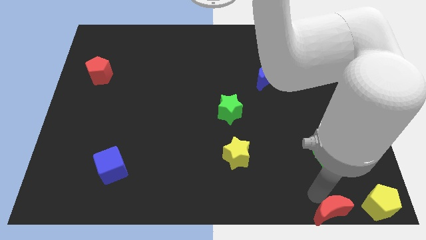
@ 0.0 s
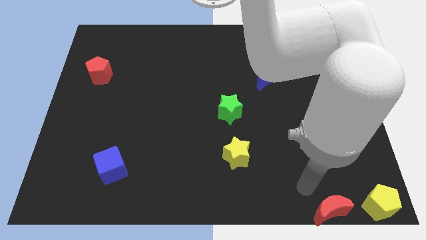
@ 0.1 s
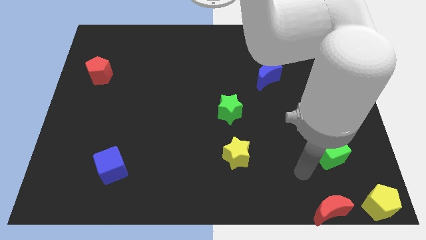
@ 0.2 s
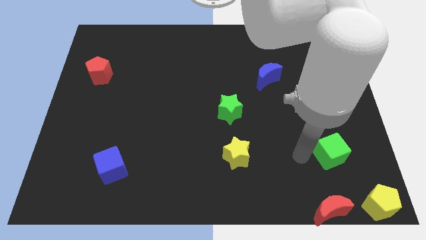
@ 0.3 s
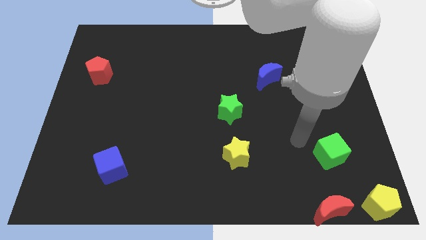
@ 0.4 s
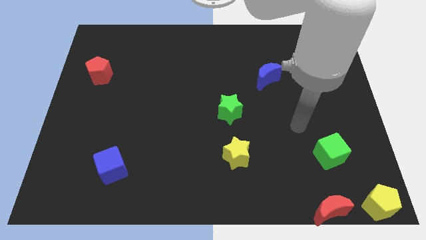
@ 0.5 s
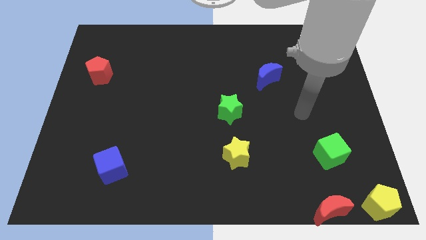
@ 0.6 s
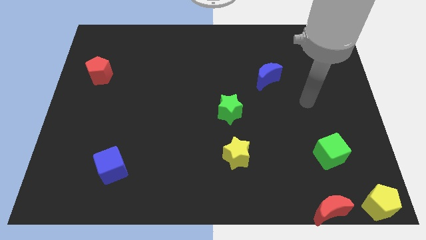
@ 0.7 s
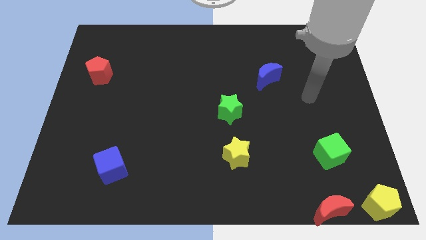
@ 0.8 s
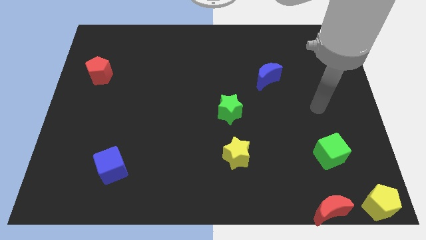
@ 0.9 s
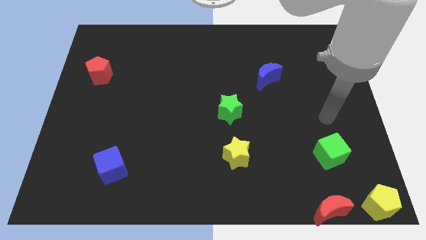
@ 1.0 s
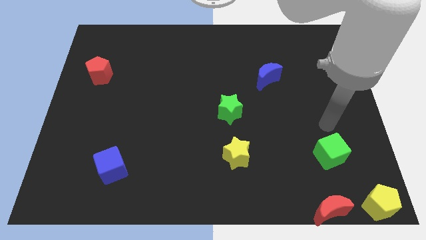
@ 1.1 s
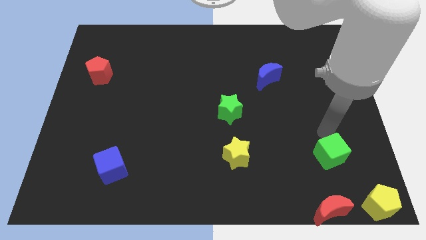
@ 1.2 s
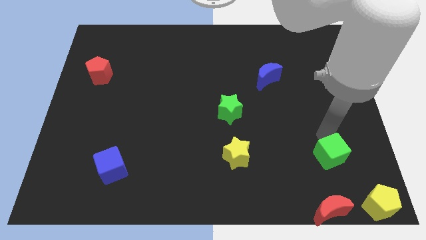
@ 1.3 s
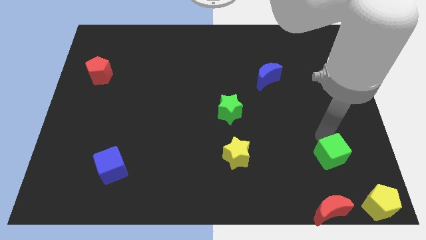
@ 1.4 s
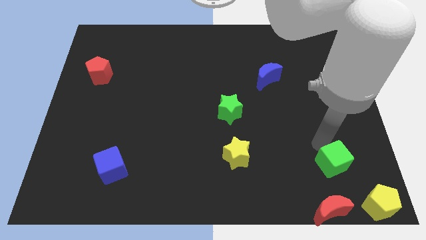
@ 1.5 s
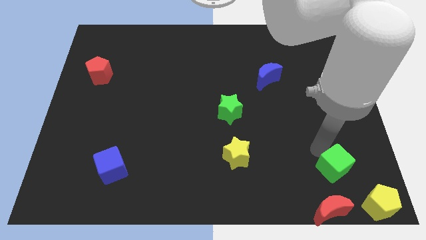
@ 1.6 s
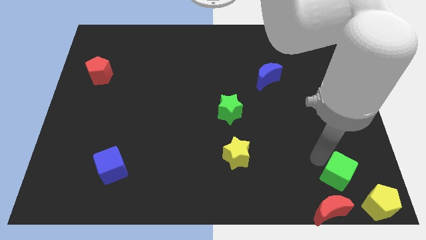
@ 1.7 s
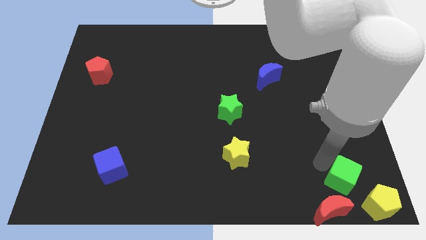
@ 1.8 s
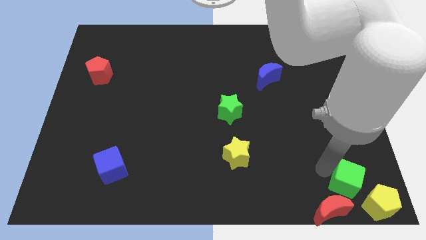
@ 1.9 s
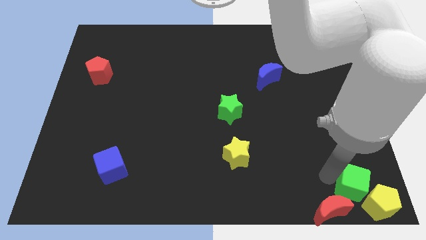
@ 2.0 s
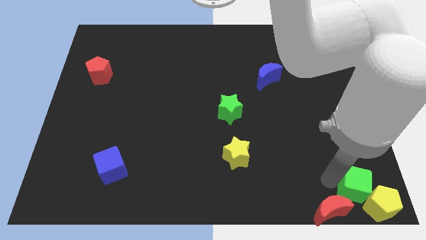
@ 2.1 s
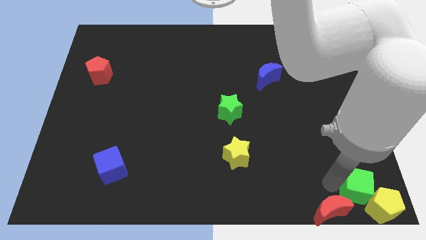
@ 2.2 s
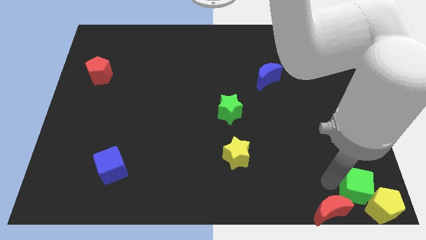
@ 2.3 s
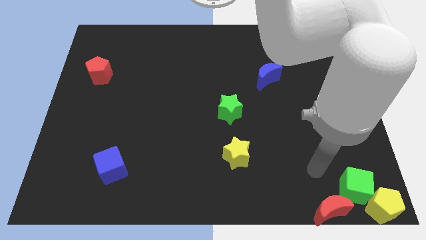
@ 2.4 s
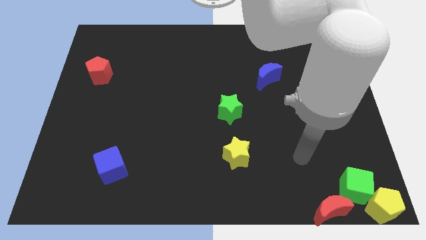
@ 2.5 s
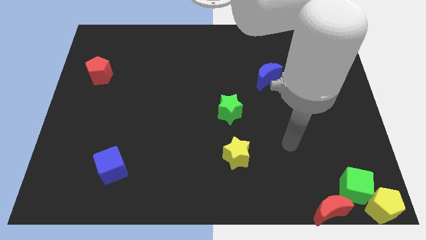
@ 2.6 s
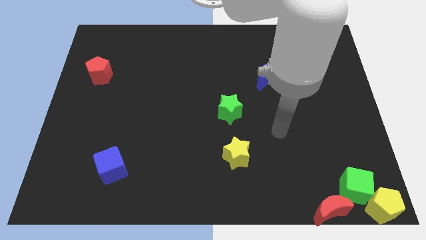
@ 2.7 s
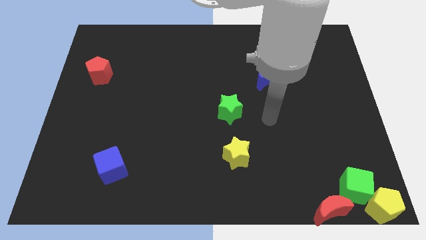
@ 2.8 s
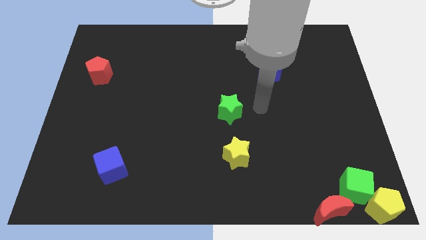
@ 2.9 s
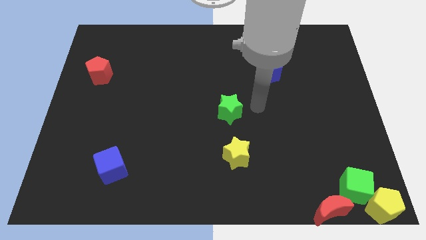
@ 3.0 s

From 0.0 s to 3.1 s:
push the green cube into the yellow and red blocks

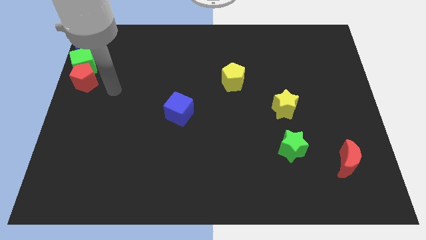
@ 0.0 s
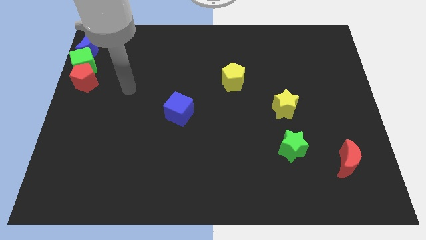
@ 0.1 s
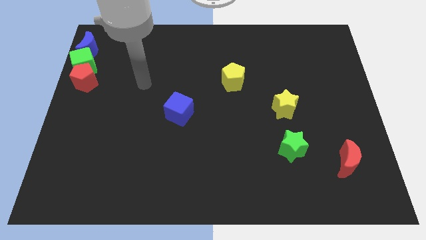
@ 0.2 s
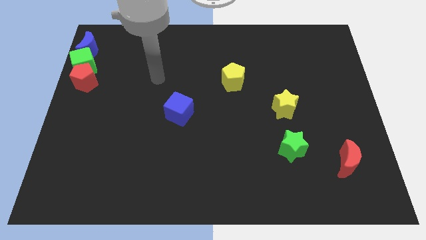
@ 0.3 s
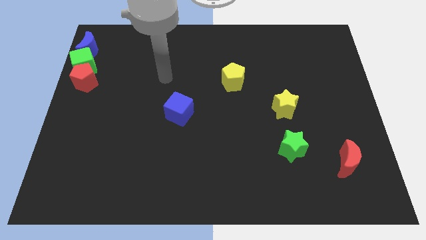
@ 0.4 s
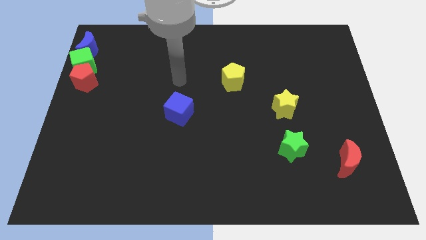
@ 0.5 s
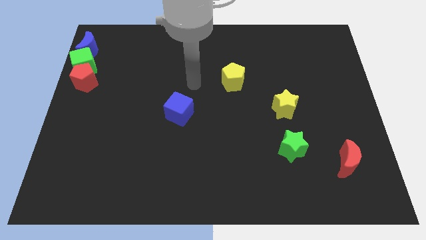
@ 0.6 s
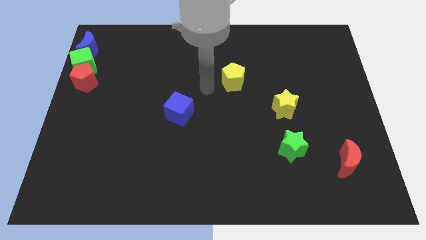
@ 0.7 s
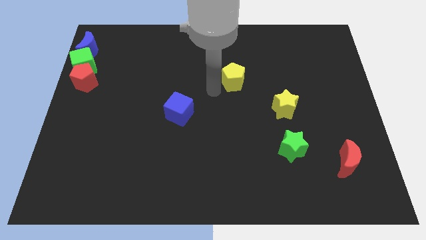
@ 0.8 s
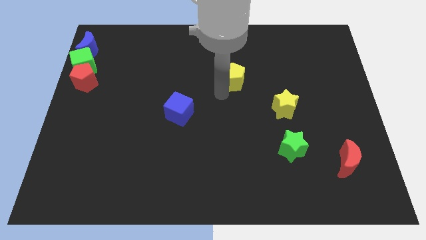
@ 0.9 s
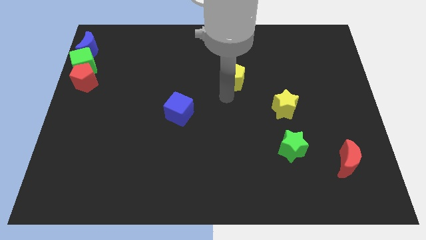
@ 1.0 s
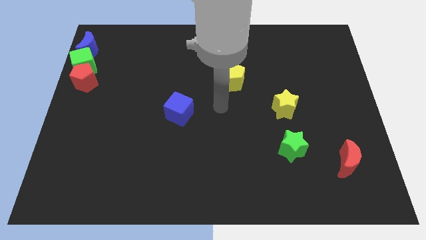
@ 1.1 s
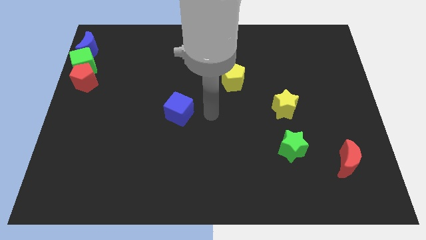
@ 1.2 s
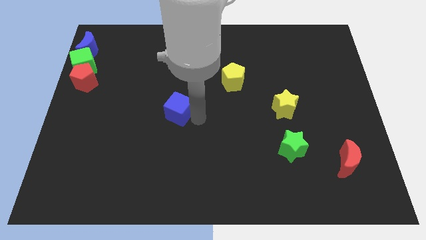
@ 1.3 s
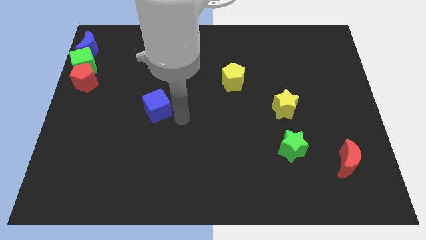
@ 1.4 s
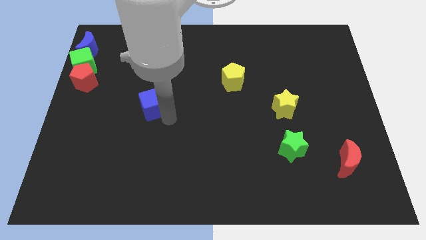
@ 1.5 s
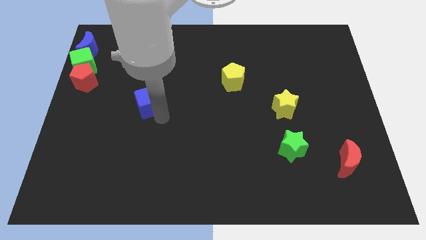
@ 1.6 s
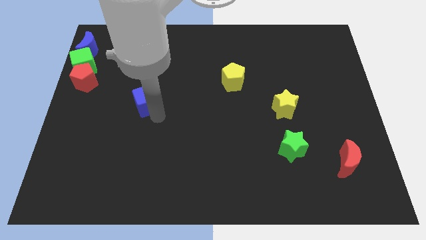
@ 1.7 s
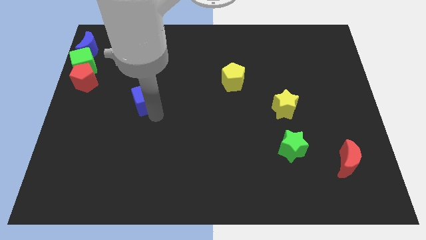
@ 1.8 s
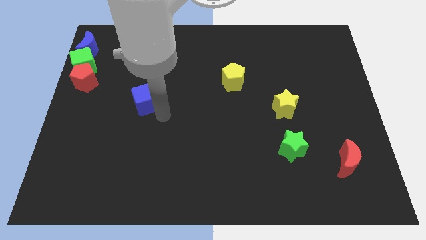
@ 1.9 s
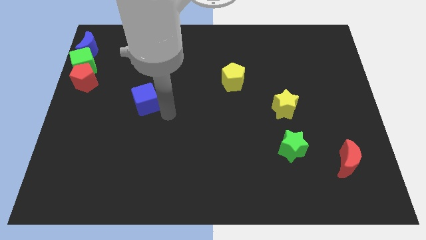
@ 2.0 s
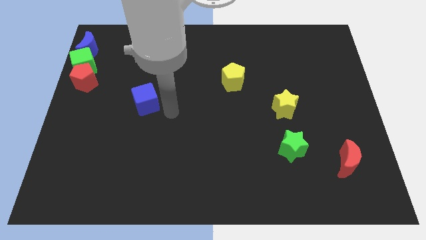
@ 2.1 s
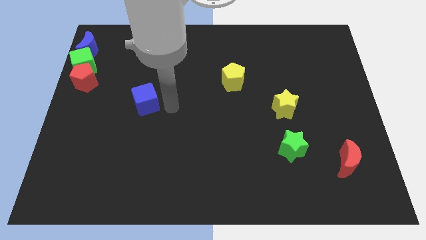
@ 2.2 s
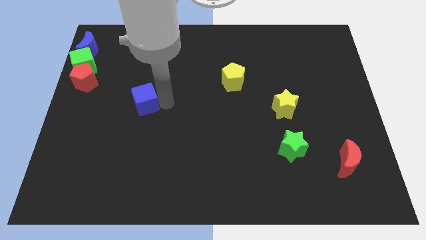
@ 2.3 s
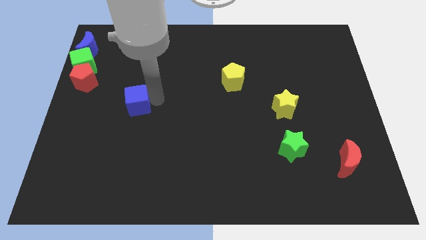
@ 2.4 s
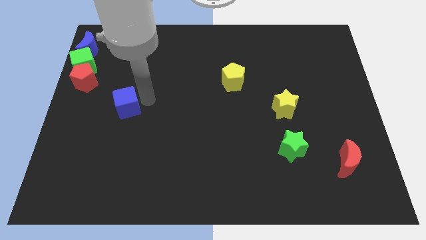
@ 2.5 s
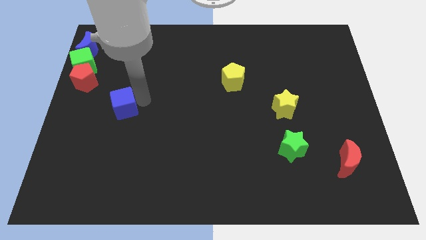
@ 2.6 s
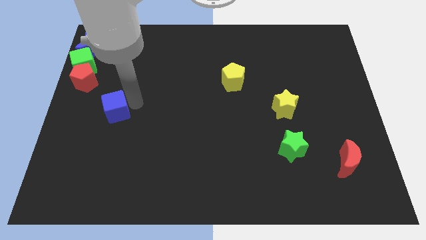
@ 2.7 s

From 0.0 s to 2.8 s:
push the blue cube to the bottom right of the red pentagon

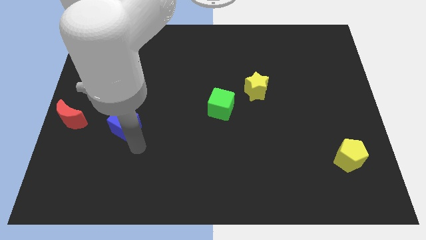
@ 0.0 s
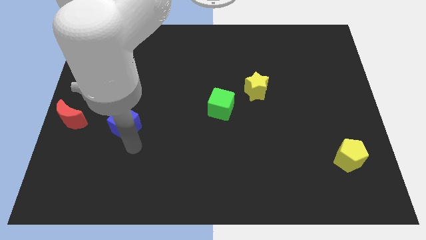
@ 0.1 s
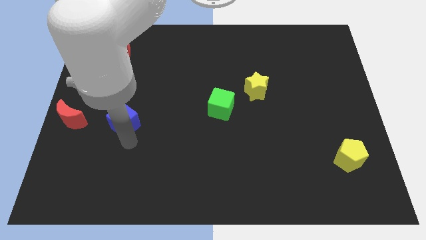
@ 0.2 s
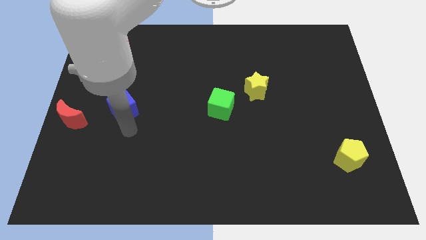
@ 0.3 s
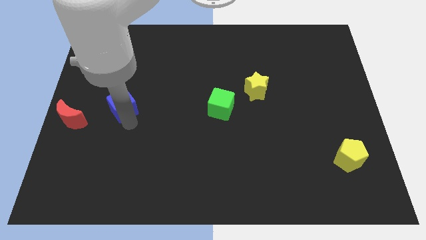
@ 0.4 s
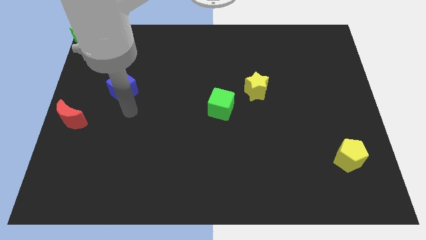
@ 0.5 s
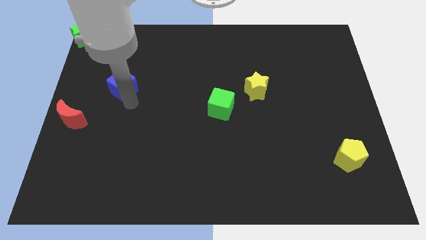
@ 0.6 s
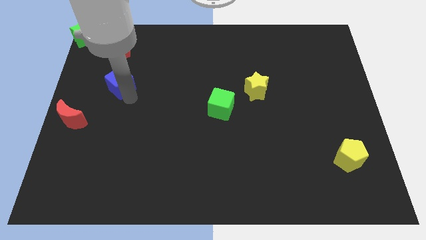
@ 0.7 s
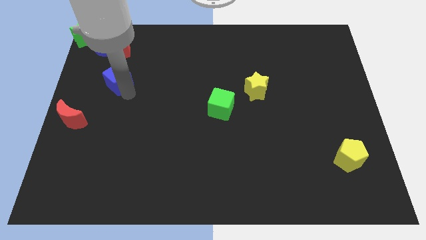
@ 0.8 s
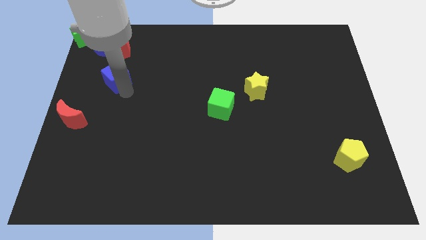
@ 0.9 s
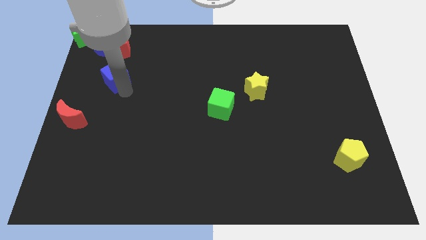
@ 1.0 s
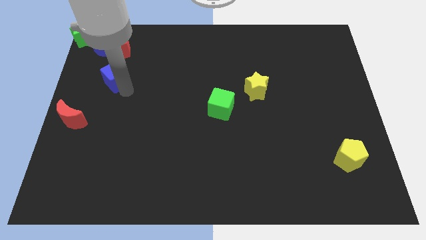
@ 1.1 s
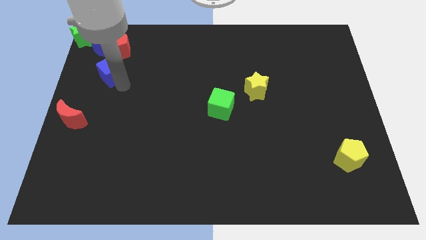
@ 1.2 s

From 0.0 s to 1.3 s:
move the blue cube below the red pentagon

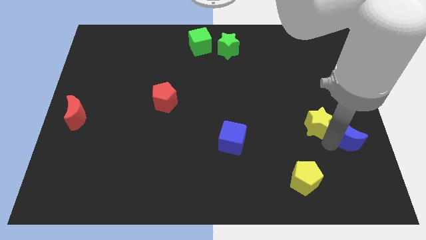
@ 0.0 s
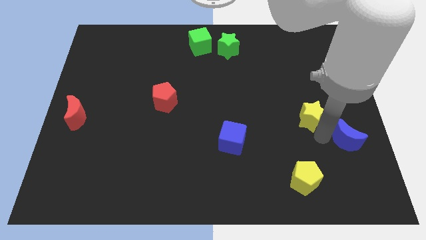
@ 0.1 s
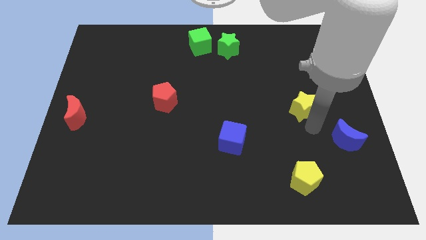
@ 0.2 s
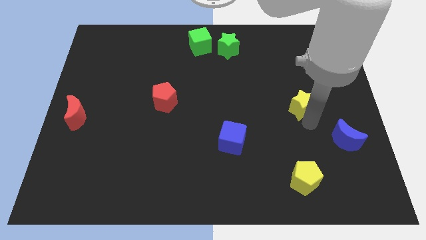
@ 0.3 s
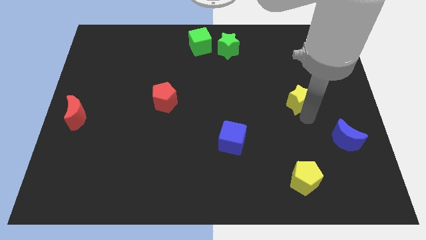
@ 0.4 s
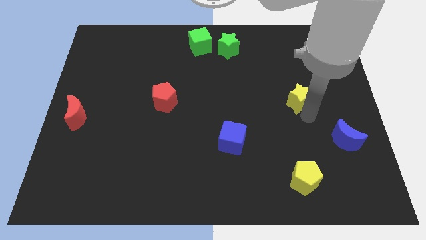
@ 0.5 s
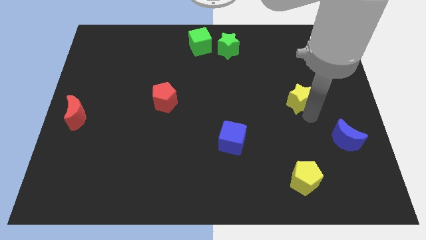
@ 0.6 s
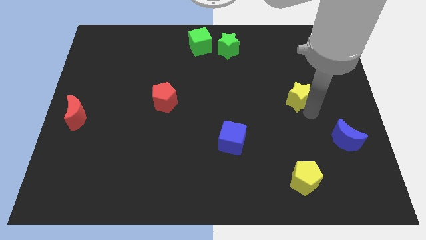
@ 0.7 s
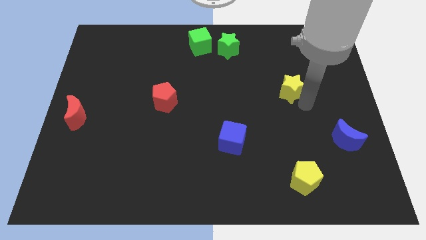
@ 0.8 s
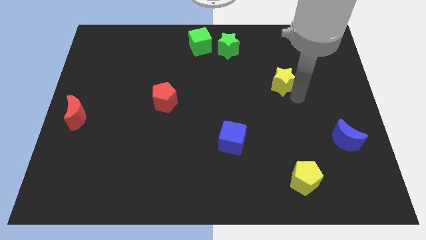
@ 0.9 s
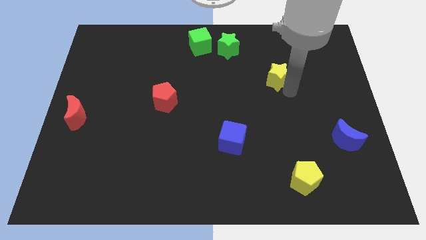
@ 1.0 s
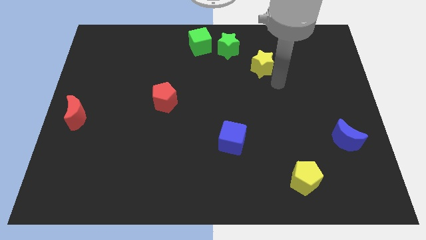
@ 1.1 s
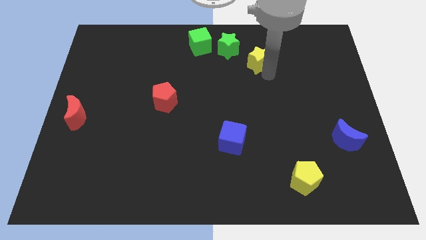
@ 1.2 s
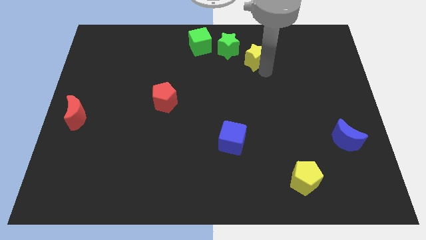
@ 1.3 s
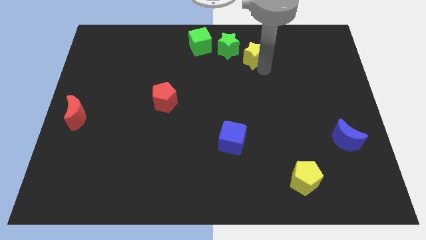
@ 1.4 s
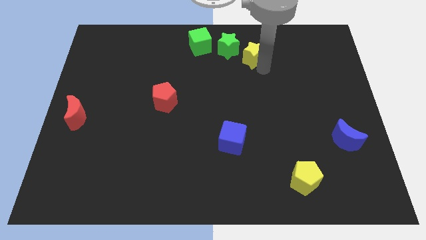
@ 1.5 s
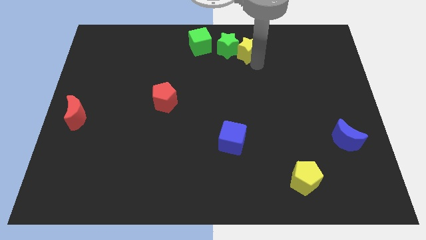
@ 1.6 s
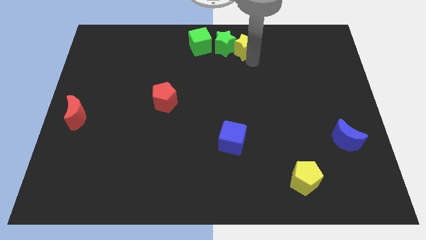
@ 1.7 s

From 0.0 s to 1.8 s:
push the yellow star to the right side of the green star

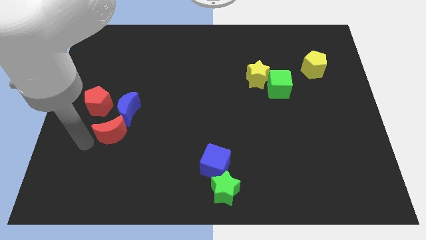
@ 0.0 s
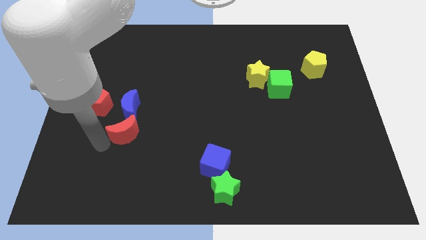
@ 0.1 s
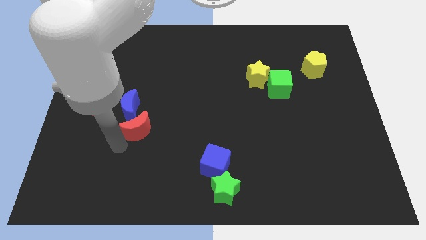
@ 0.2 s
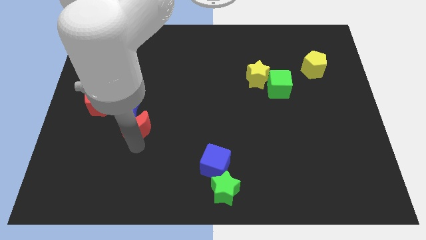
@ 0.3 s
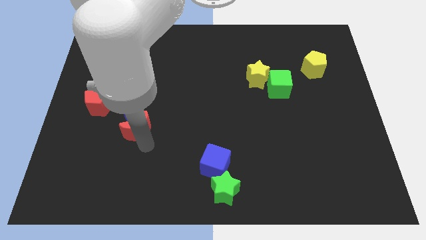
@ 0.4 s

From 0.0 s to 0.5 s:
push the red crescent below the blue crescent
